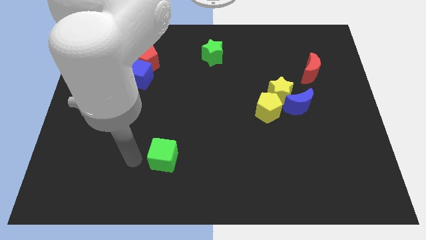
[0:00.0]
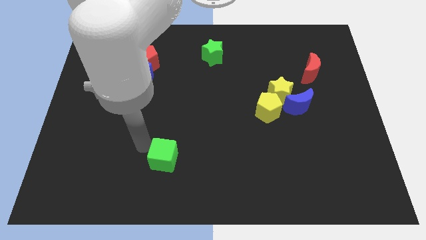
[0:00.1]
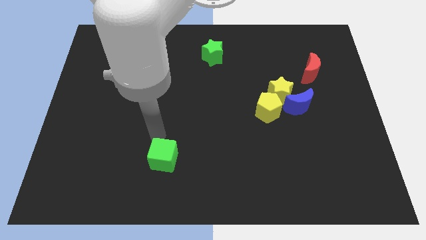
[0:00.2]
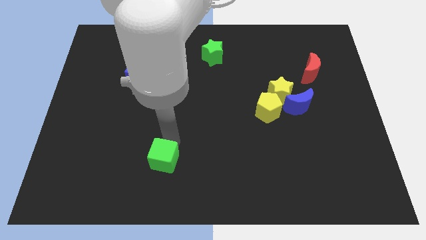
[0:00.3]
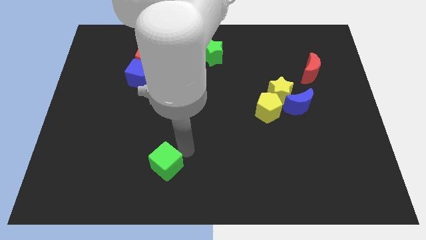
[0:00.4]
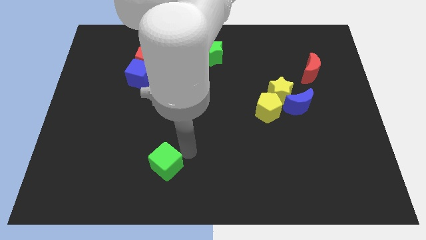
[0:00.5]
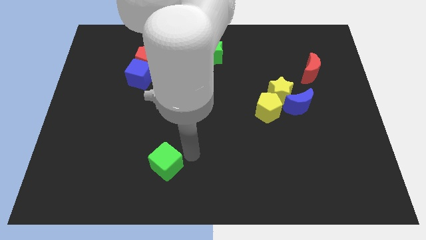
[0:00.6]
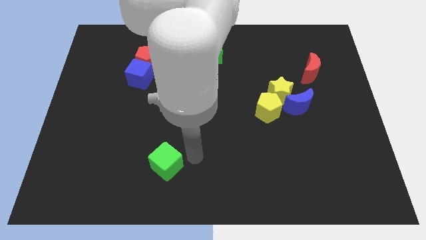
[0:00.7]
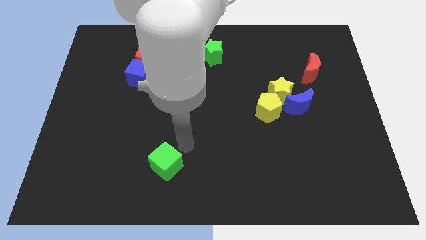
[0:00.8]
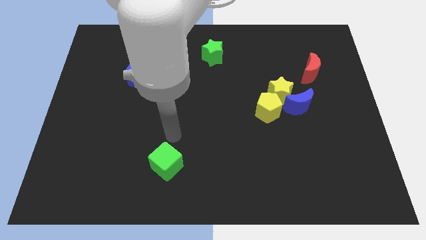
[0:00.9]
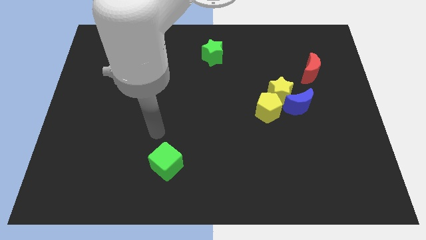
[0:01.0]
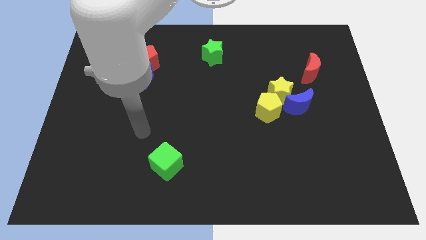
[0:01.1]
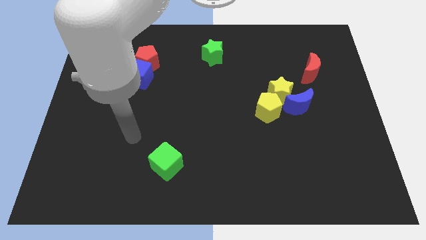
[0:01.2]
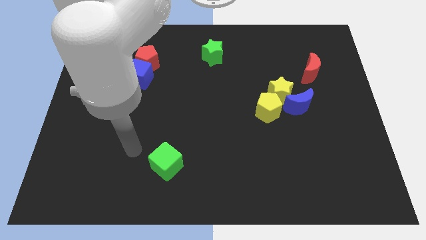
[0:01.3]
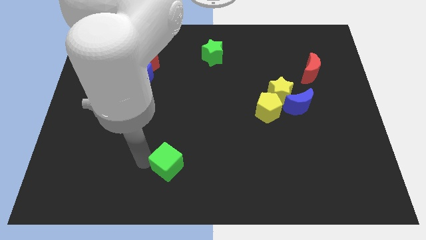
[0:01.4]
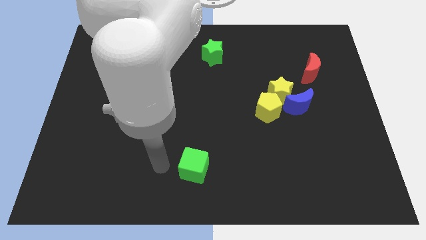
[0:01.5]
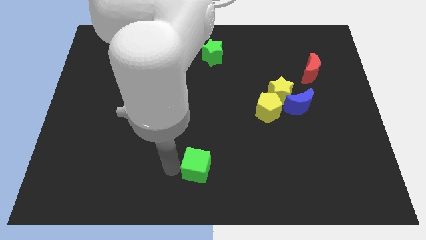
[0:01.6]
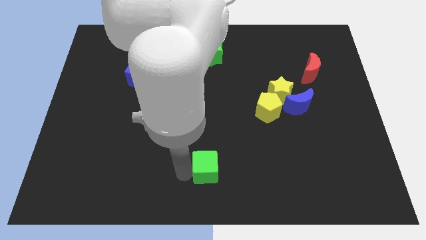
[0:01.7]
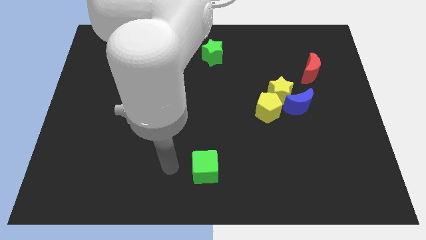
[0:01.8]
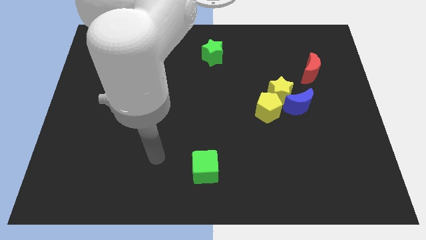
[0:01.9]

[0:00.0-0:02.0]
move the green cube vertically at the bottom side of the green star

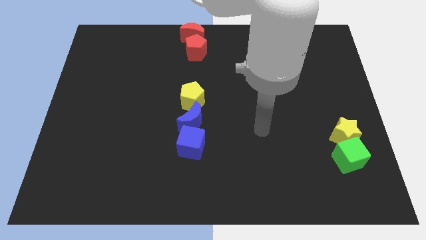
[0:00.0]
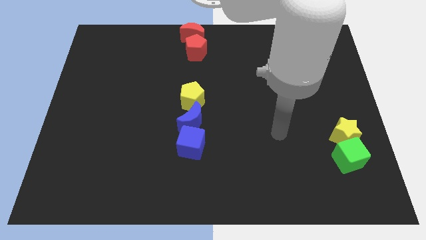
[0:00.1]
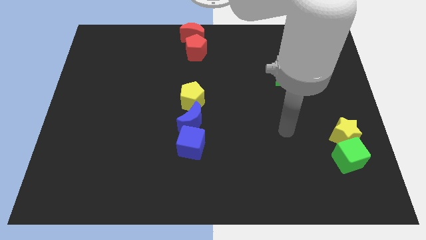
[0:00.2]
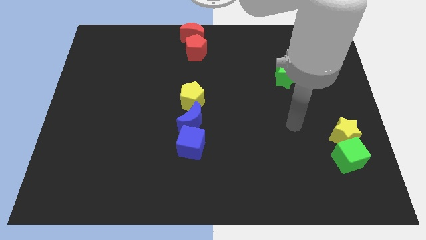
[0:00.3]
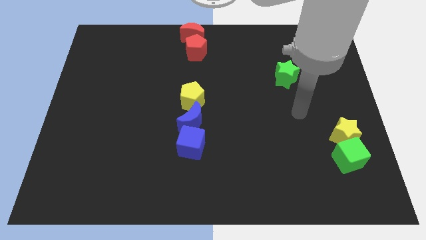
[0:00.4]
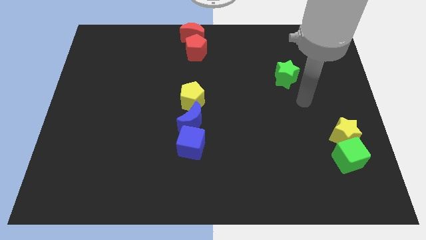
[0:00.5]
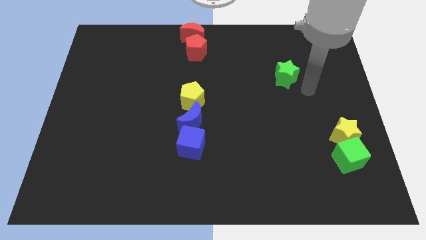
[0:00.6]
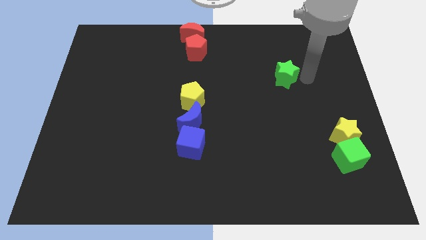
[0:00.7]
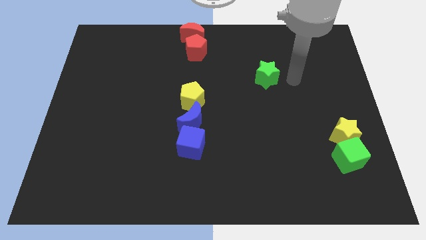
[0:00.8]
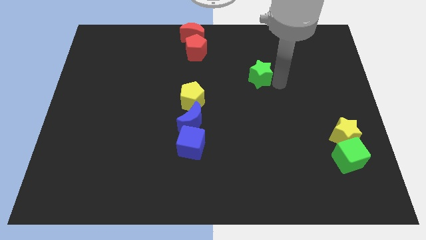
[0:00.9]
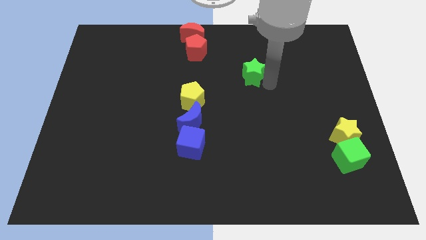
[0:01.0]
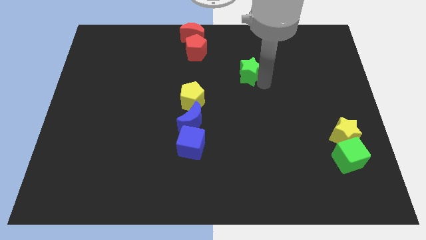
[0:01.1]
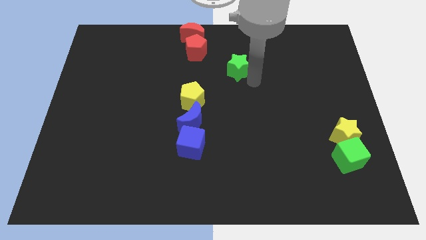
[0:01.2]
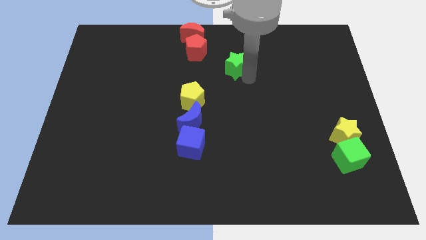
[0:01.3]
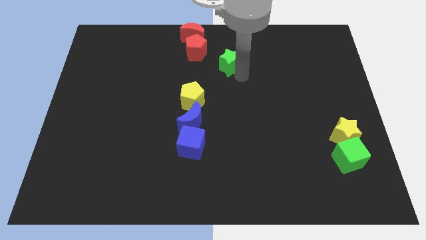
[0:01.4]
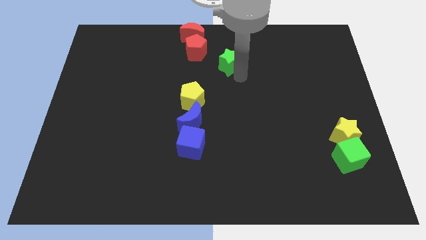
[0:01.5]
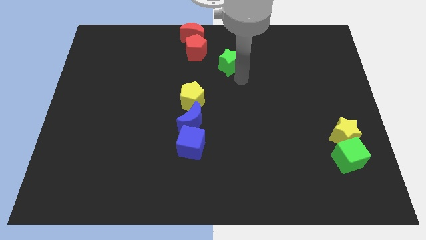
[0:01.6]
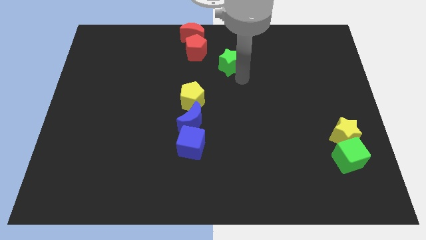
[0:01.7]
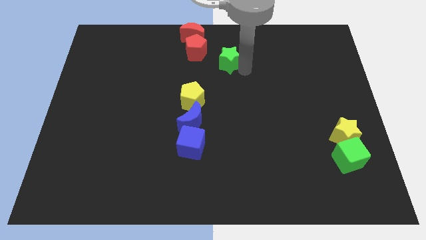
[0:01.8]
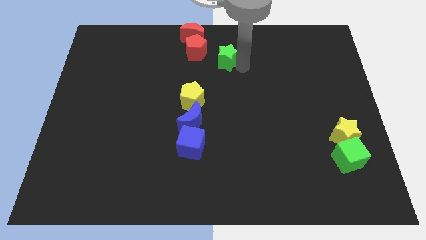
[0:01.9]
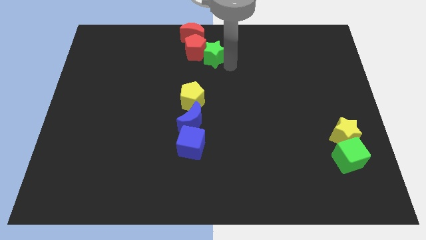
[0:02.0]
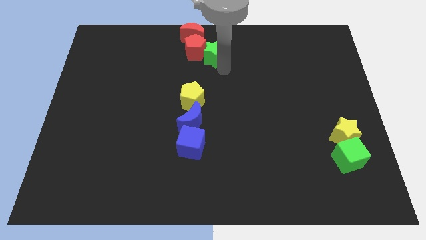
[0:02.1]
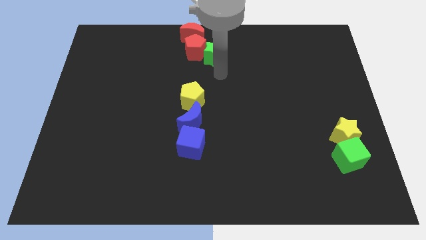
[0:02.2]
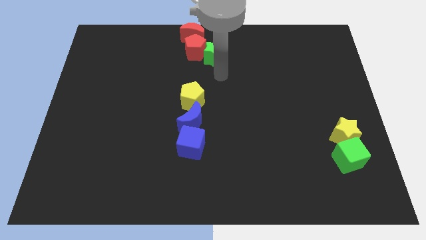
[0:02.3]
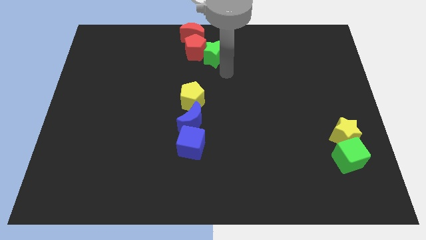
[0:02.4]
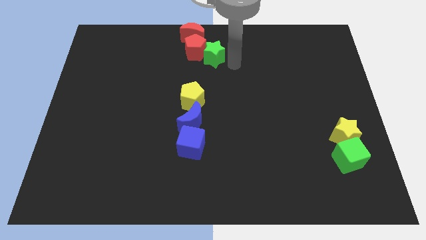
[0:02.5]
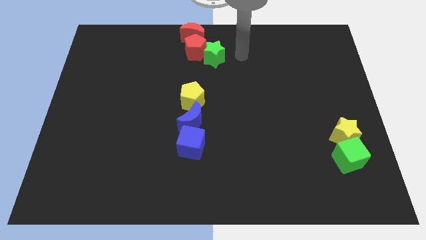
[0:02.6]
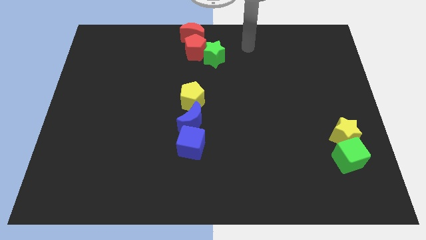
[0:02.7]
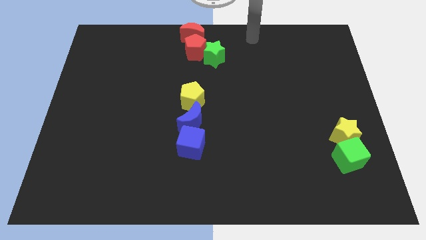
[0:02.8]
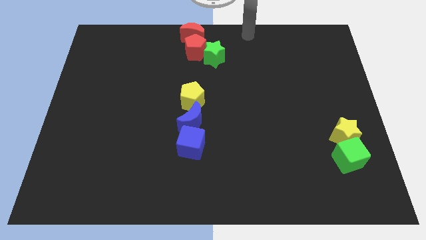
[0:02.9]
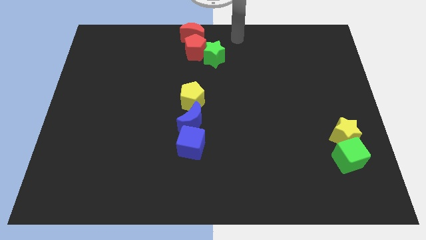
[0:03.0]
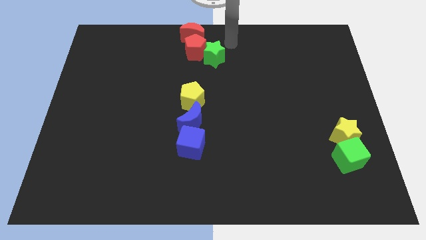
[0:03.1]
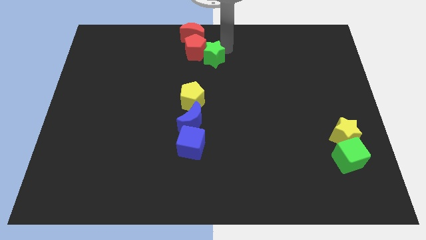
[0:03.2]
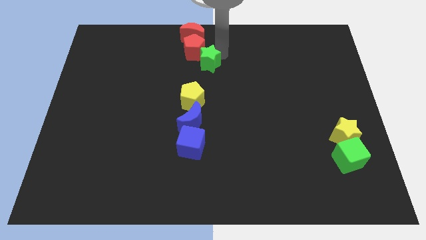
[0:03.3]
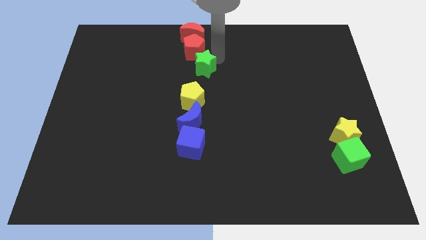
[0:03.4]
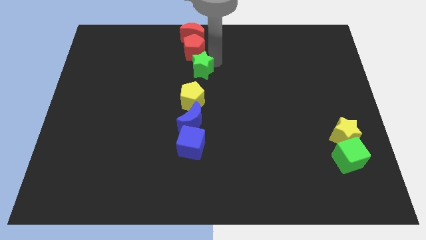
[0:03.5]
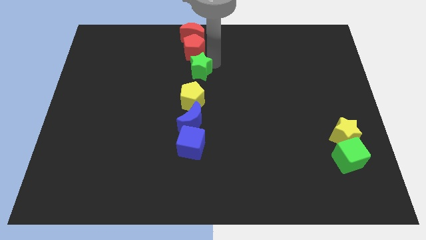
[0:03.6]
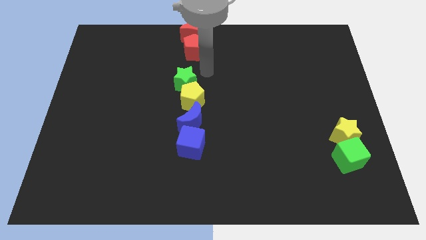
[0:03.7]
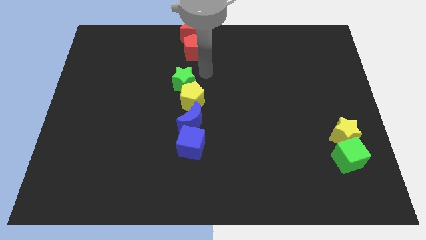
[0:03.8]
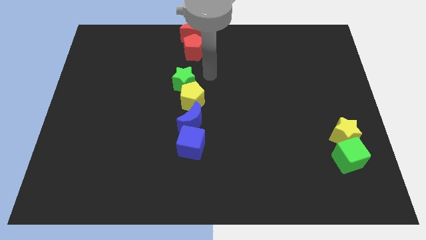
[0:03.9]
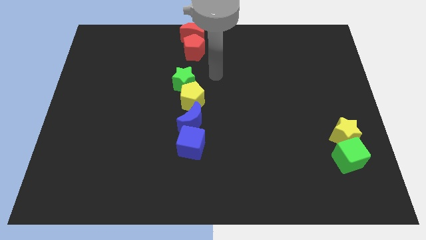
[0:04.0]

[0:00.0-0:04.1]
slide green star close to yellow pentagon

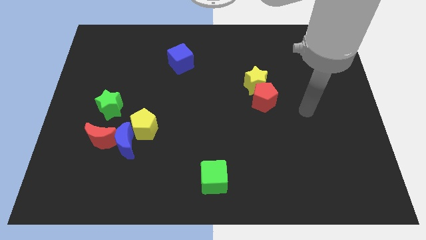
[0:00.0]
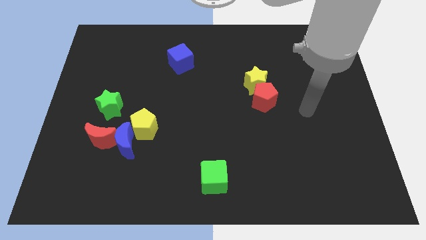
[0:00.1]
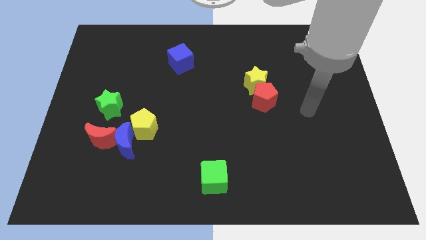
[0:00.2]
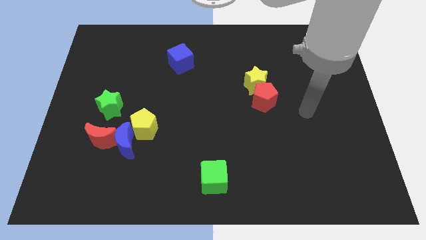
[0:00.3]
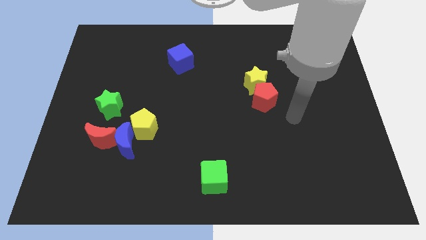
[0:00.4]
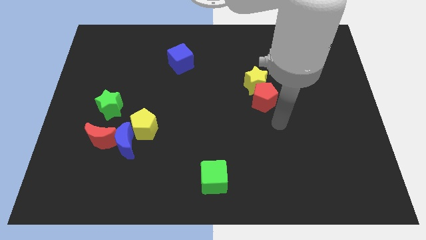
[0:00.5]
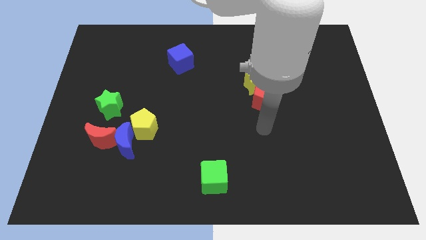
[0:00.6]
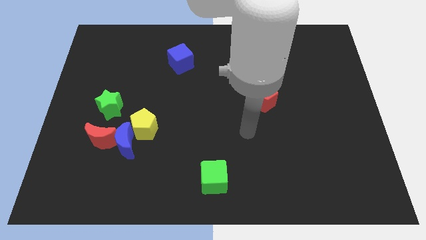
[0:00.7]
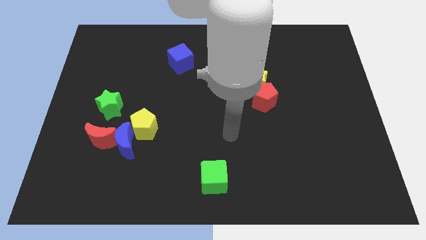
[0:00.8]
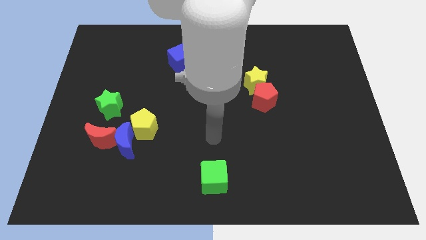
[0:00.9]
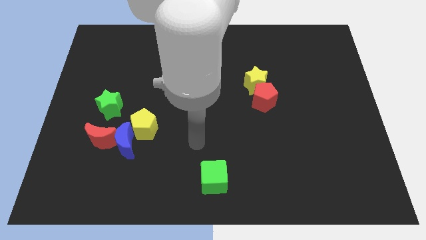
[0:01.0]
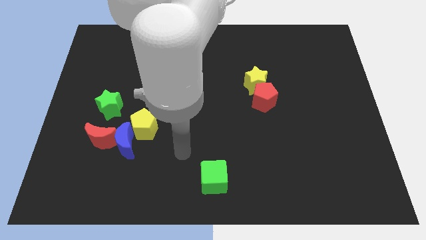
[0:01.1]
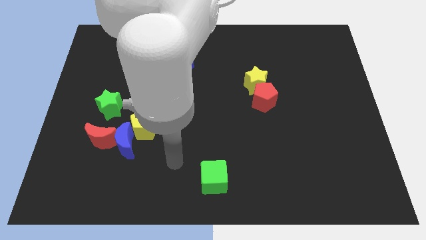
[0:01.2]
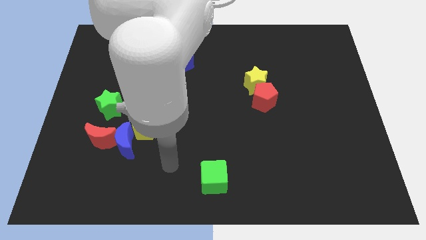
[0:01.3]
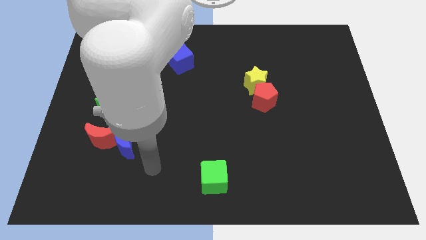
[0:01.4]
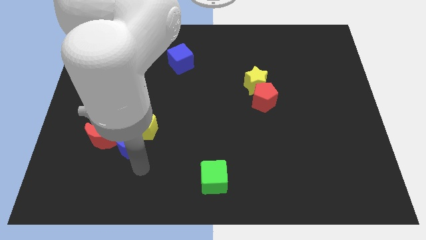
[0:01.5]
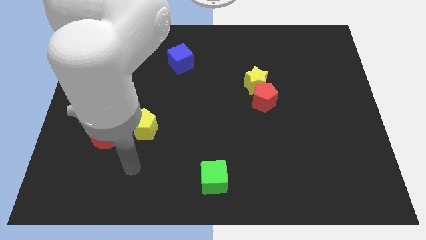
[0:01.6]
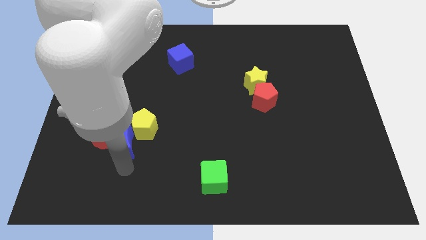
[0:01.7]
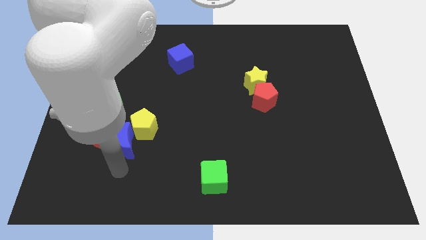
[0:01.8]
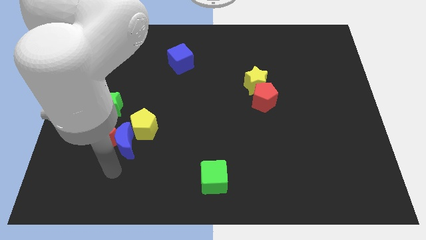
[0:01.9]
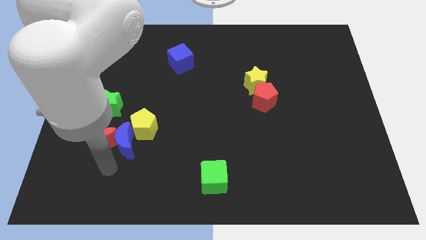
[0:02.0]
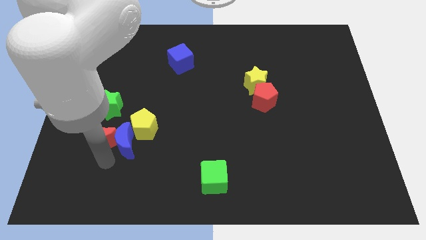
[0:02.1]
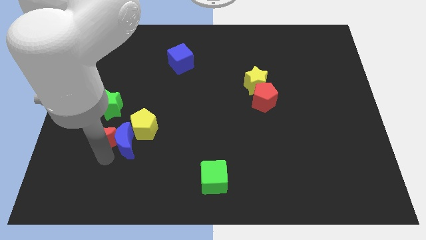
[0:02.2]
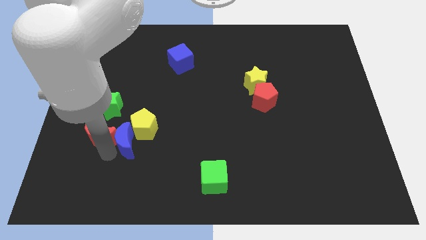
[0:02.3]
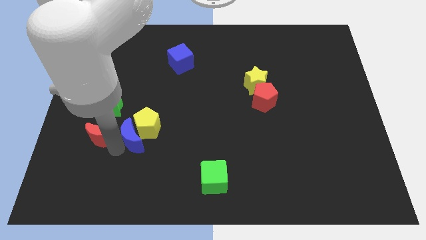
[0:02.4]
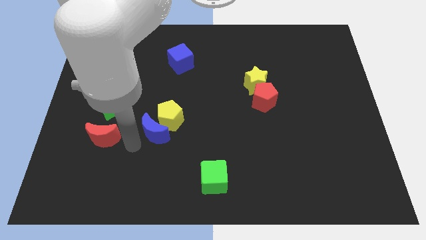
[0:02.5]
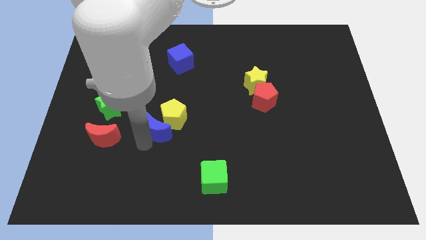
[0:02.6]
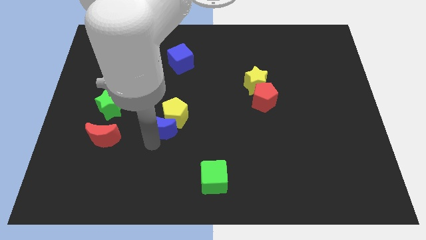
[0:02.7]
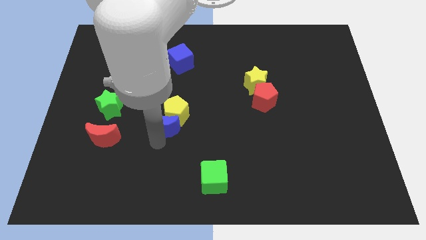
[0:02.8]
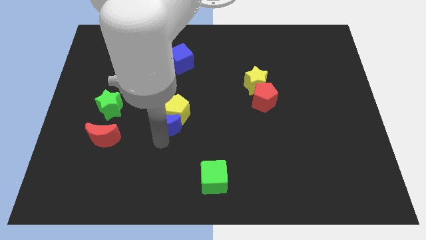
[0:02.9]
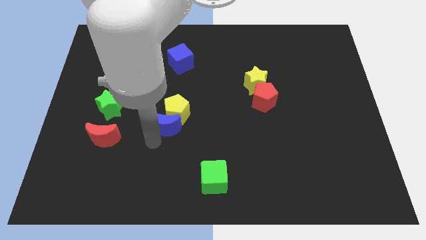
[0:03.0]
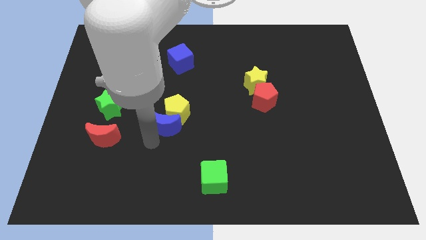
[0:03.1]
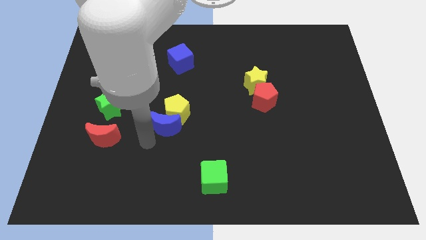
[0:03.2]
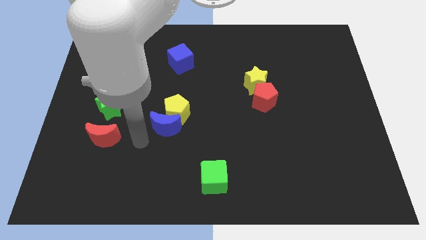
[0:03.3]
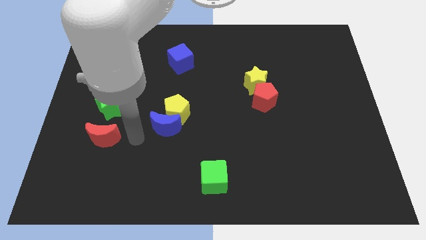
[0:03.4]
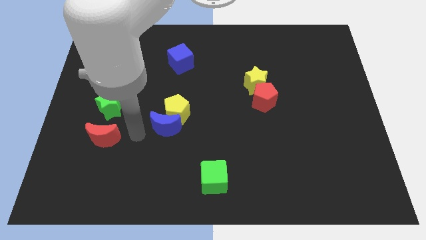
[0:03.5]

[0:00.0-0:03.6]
move the blue crescent and yellow pentagon away from the red moon
